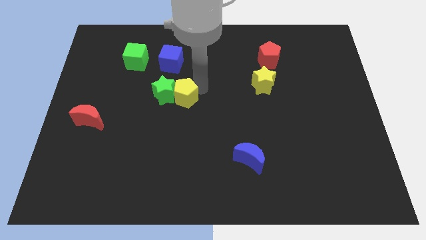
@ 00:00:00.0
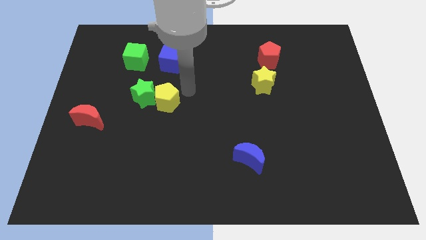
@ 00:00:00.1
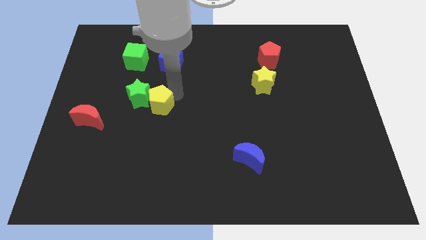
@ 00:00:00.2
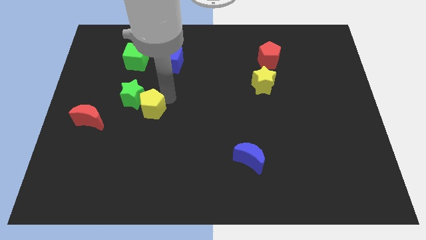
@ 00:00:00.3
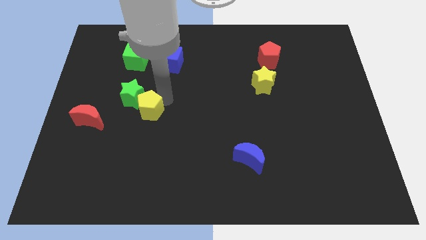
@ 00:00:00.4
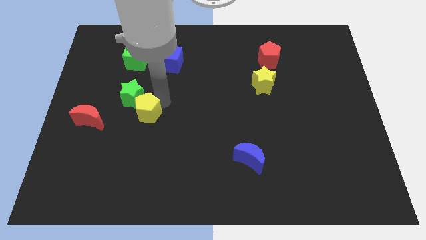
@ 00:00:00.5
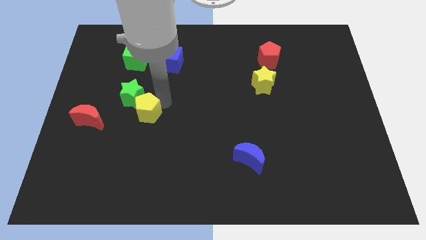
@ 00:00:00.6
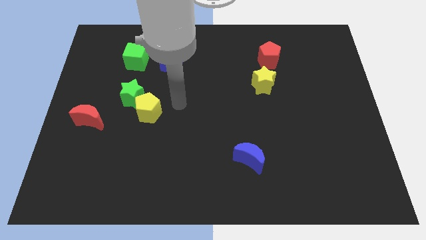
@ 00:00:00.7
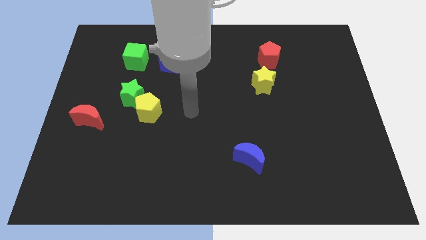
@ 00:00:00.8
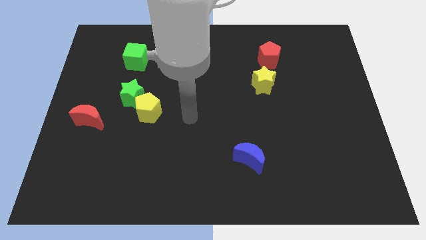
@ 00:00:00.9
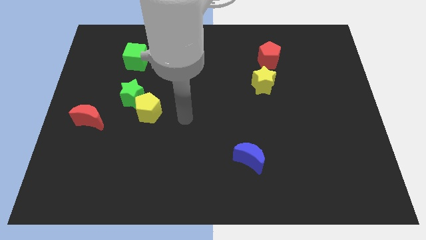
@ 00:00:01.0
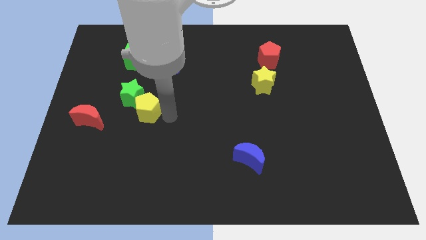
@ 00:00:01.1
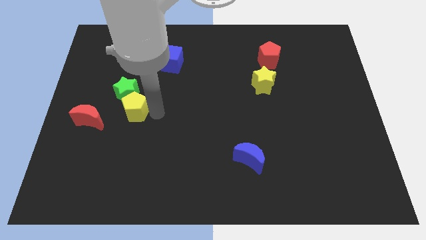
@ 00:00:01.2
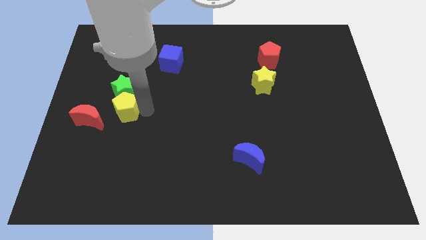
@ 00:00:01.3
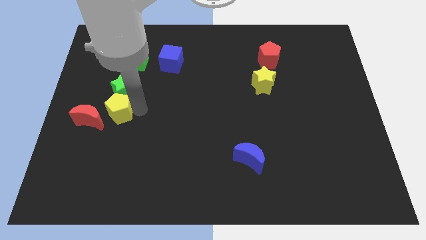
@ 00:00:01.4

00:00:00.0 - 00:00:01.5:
place the yellow pentagon below the green star

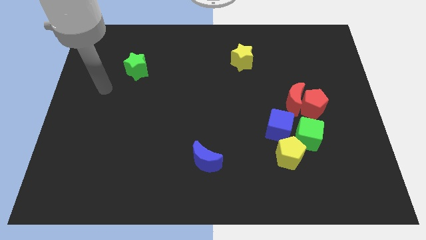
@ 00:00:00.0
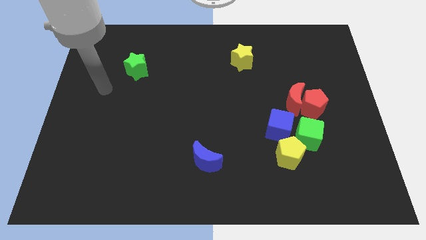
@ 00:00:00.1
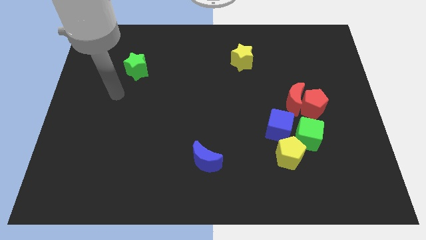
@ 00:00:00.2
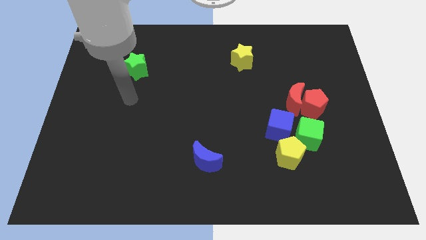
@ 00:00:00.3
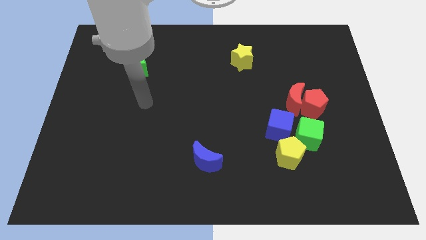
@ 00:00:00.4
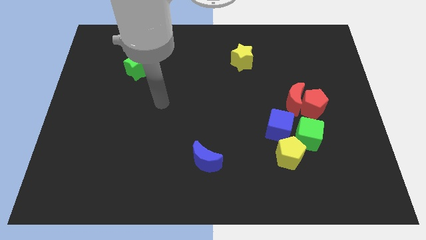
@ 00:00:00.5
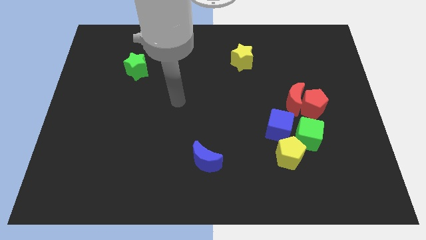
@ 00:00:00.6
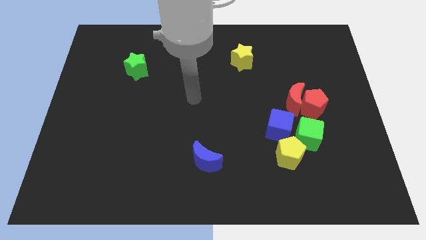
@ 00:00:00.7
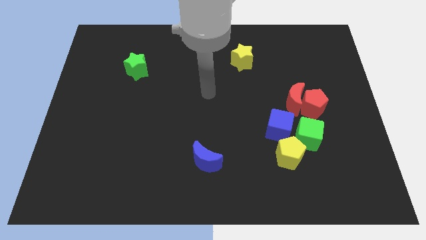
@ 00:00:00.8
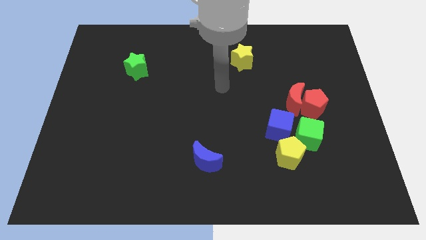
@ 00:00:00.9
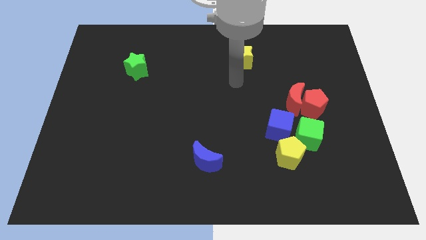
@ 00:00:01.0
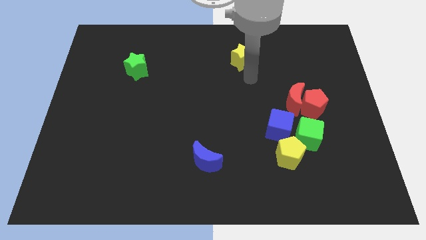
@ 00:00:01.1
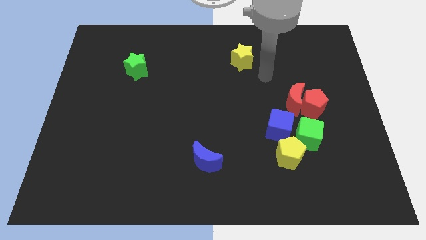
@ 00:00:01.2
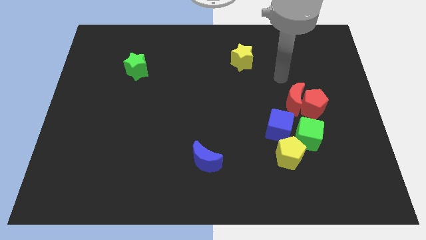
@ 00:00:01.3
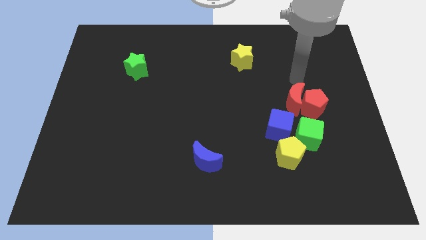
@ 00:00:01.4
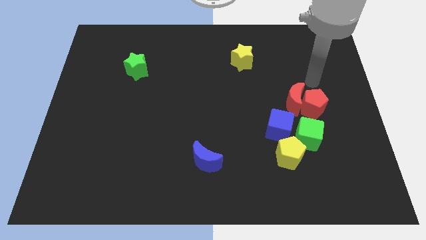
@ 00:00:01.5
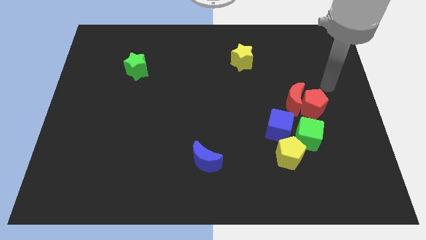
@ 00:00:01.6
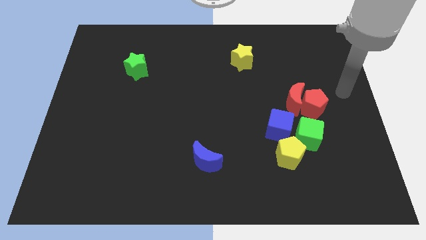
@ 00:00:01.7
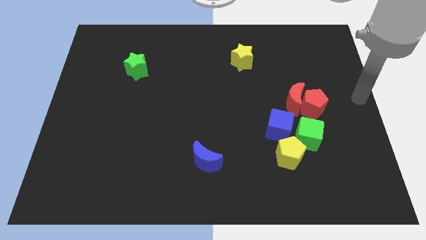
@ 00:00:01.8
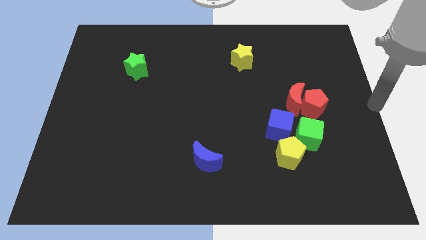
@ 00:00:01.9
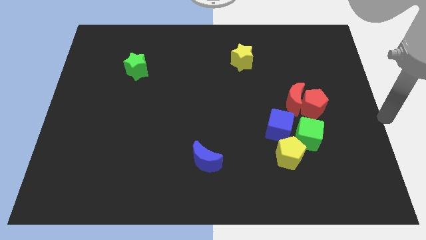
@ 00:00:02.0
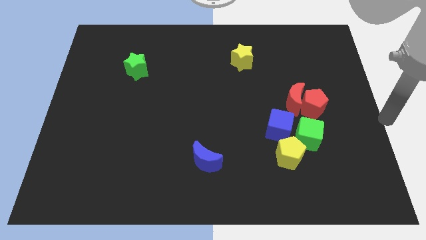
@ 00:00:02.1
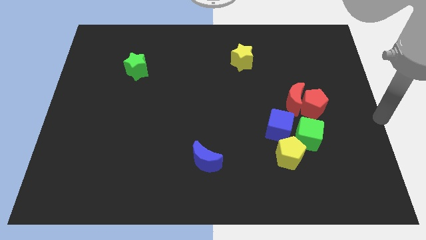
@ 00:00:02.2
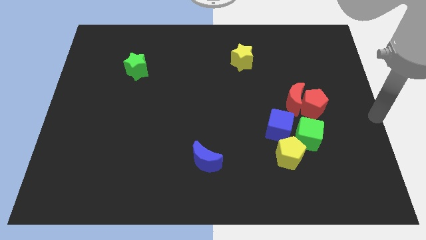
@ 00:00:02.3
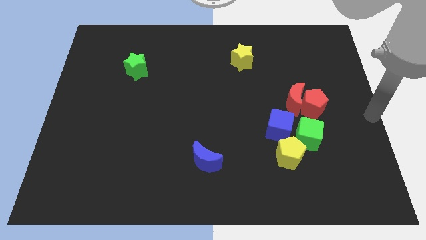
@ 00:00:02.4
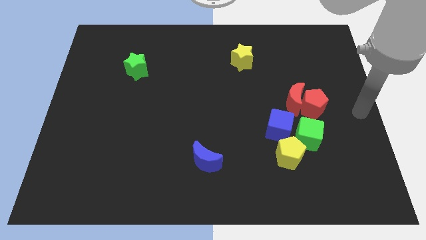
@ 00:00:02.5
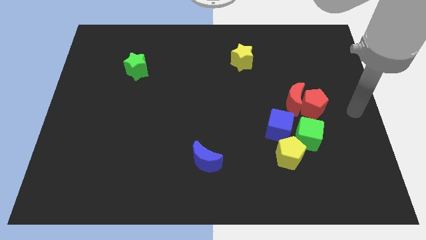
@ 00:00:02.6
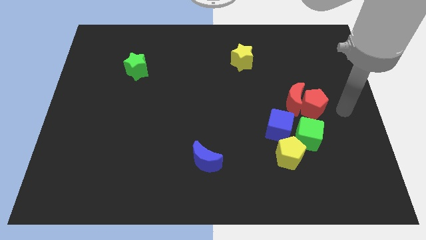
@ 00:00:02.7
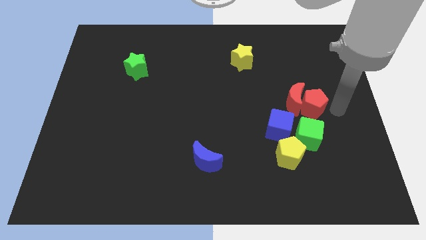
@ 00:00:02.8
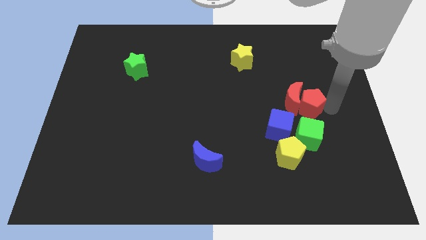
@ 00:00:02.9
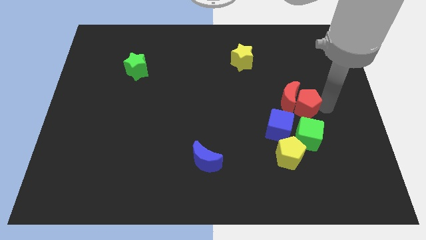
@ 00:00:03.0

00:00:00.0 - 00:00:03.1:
place the arm right to the red pentagon

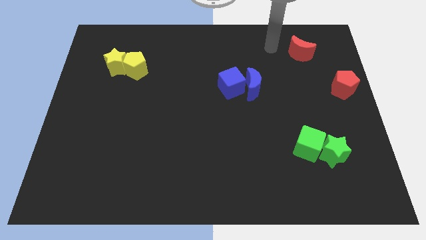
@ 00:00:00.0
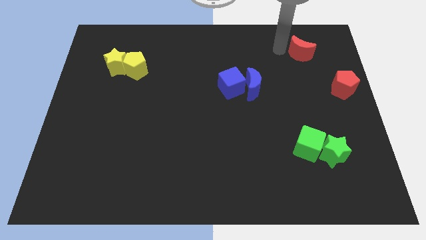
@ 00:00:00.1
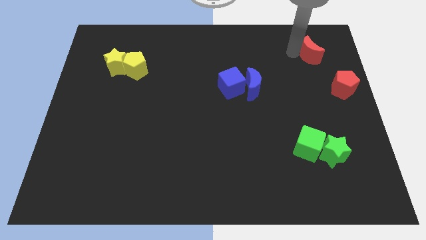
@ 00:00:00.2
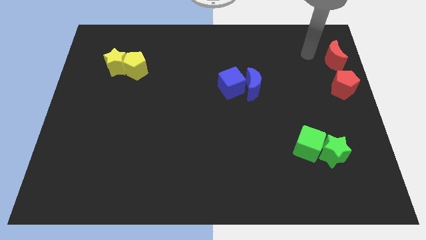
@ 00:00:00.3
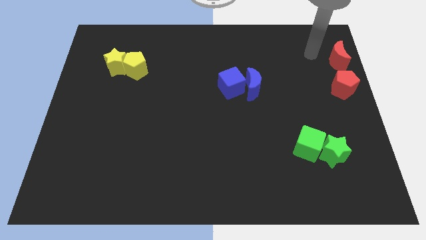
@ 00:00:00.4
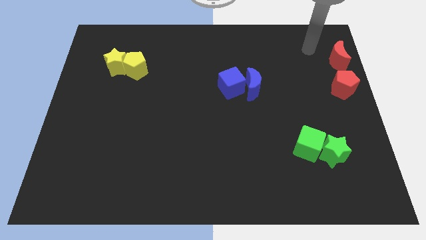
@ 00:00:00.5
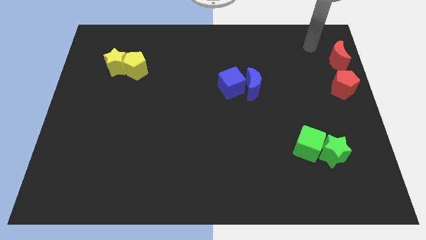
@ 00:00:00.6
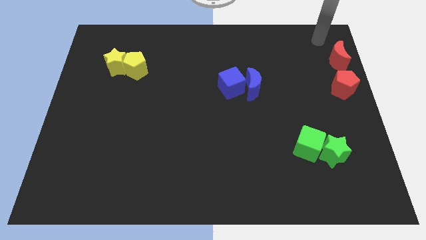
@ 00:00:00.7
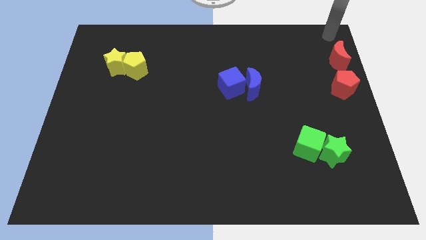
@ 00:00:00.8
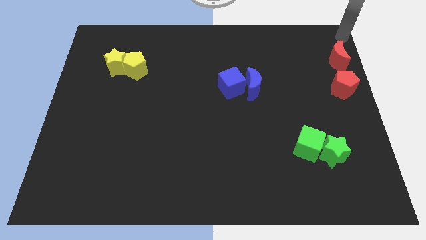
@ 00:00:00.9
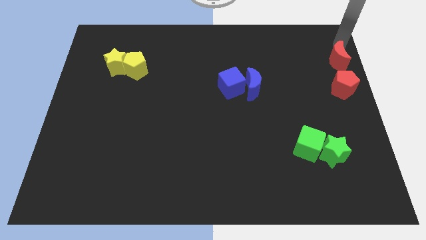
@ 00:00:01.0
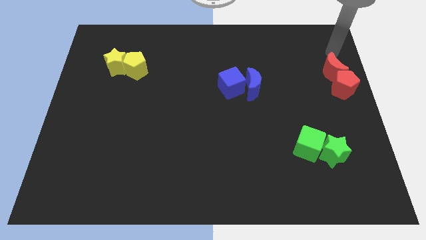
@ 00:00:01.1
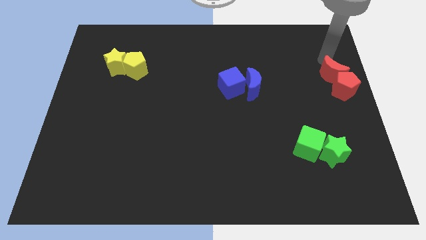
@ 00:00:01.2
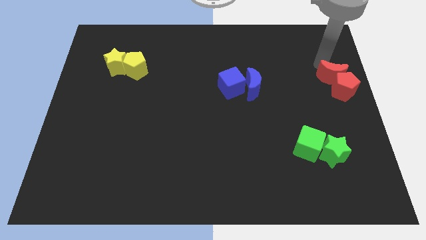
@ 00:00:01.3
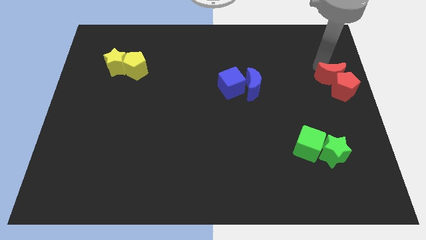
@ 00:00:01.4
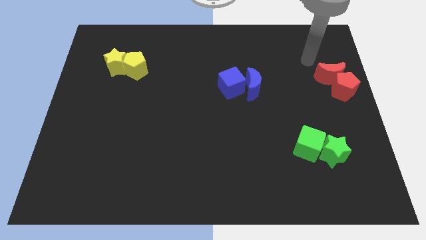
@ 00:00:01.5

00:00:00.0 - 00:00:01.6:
push the red crescent close to the red pentagon

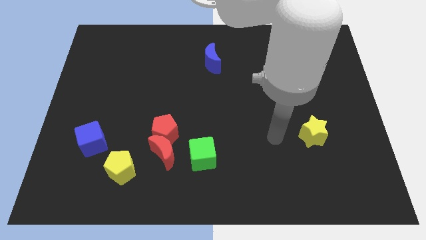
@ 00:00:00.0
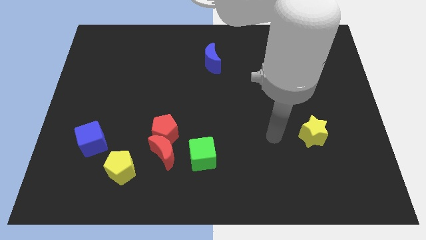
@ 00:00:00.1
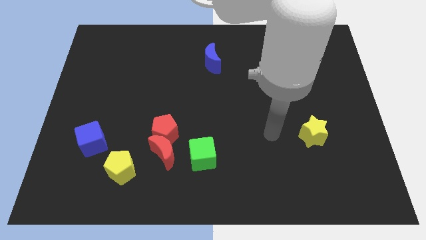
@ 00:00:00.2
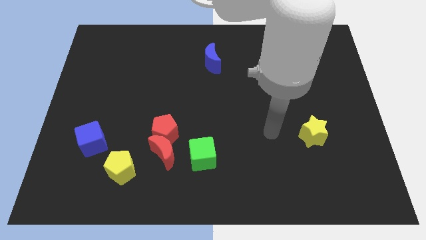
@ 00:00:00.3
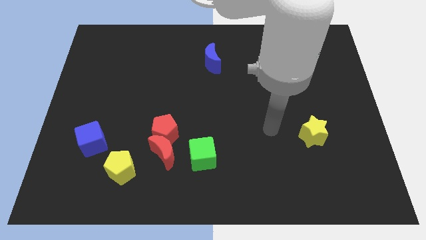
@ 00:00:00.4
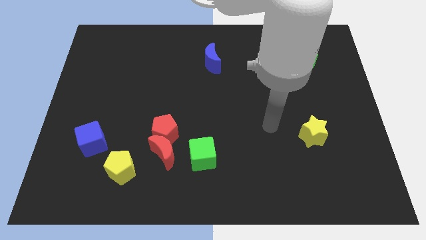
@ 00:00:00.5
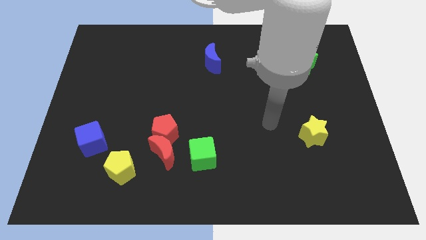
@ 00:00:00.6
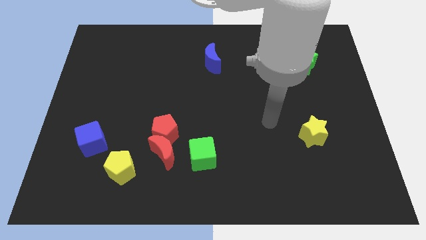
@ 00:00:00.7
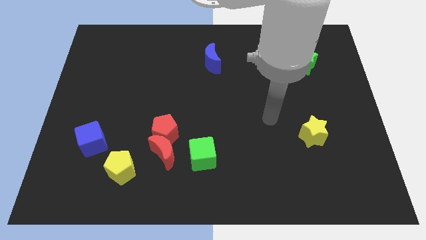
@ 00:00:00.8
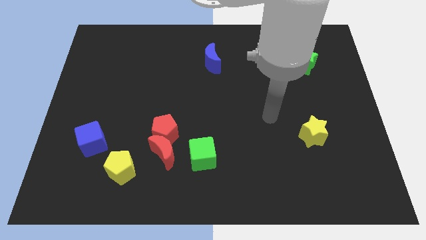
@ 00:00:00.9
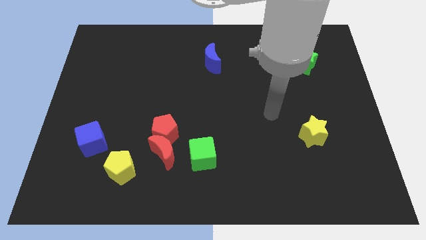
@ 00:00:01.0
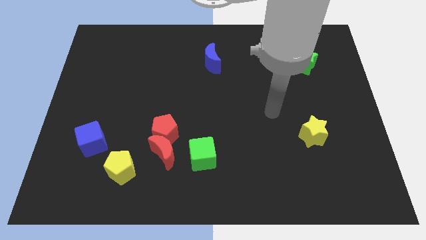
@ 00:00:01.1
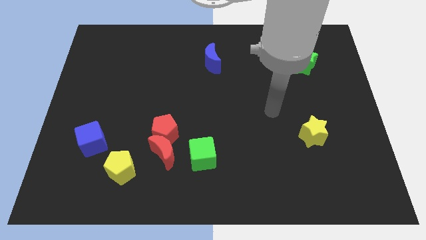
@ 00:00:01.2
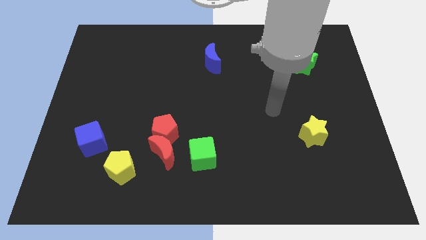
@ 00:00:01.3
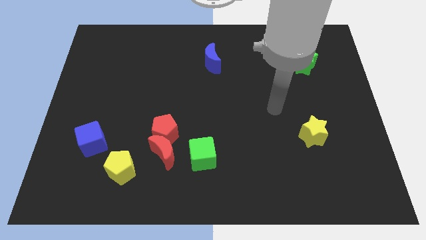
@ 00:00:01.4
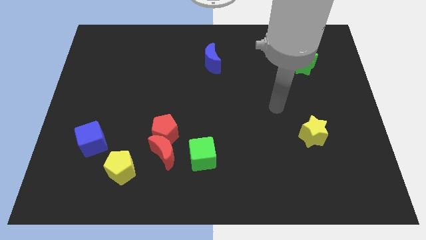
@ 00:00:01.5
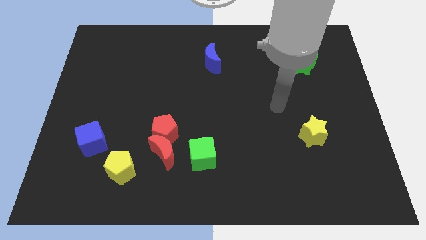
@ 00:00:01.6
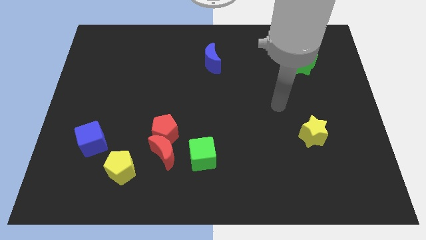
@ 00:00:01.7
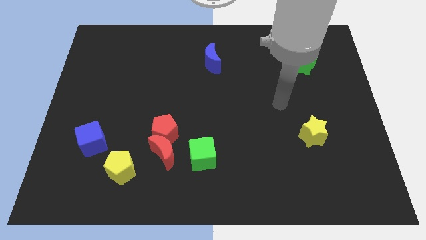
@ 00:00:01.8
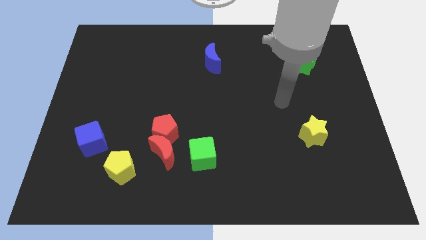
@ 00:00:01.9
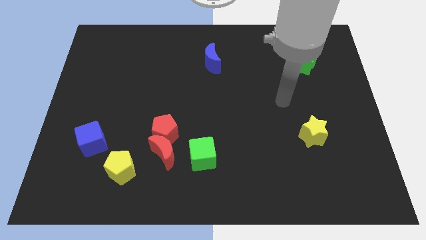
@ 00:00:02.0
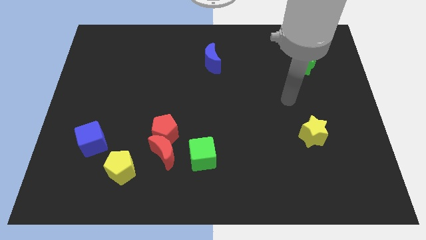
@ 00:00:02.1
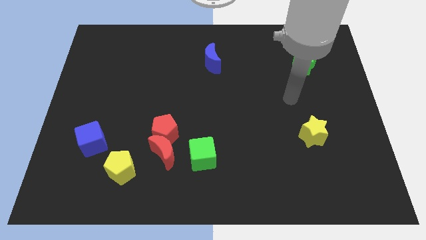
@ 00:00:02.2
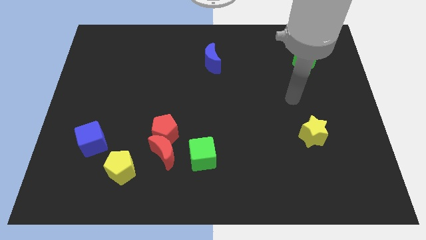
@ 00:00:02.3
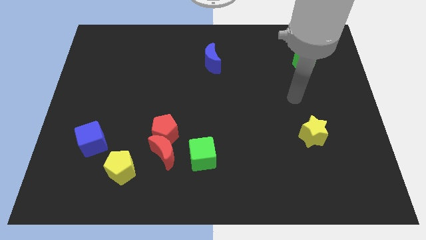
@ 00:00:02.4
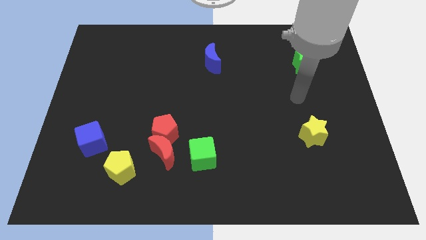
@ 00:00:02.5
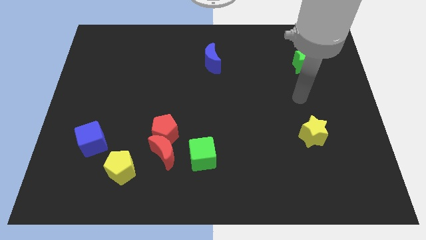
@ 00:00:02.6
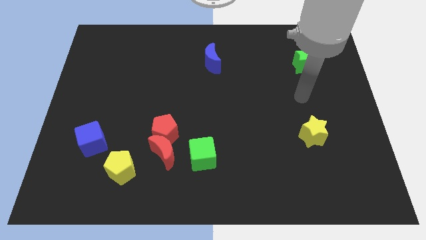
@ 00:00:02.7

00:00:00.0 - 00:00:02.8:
place your arm in between the green star and yellow star
